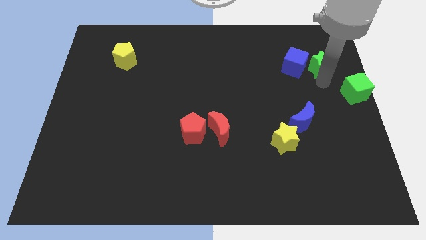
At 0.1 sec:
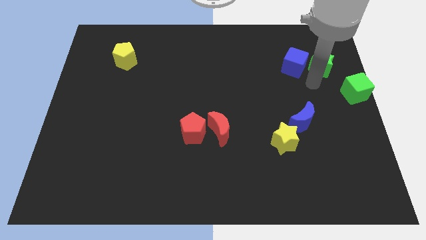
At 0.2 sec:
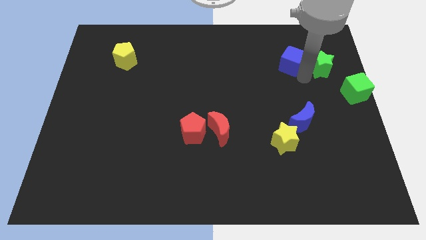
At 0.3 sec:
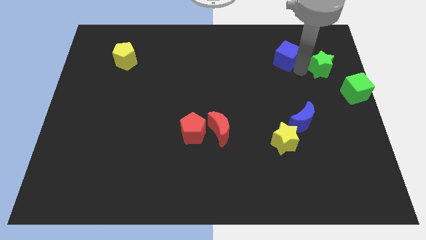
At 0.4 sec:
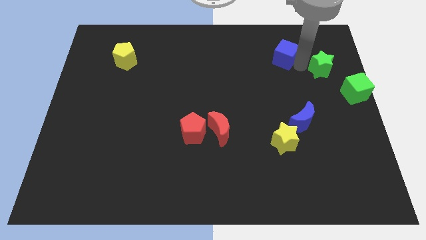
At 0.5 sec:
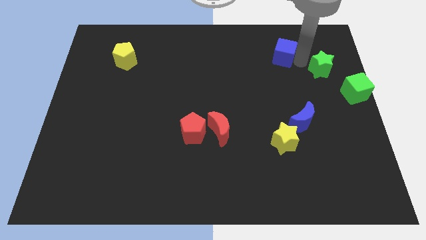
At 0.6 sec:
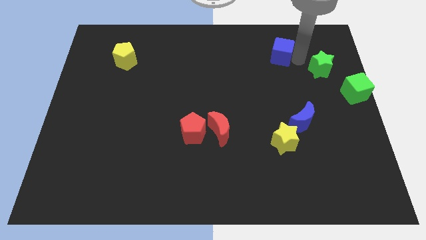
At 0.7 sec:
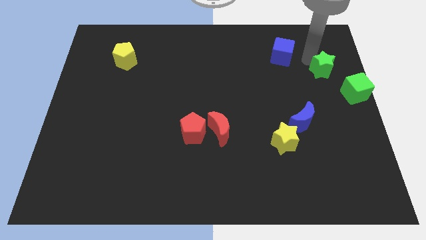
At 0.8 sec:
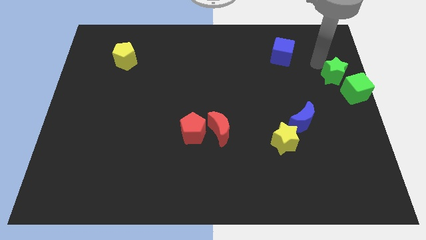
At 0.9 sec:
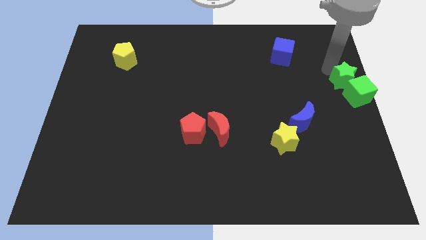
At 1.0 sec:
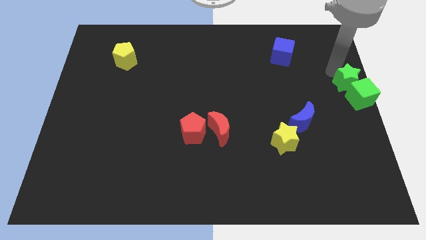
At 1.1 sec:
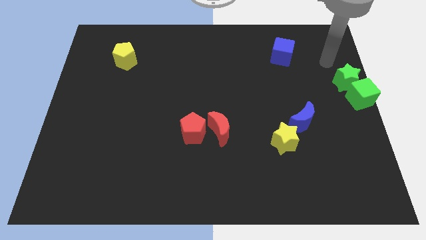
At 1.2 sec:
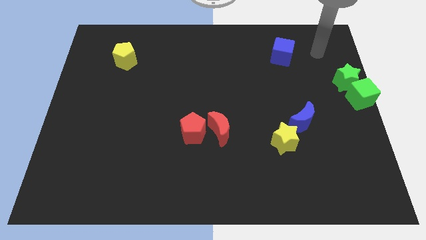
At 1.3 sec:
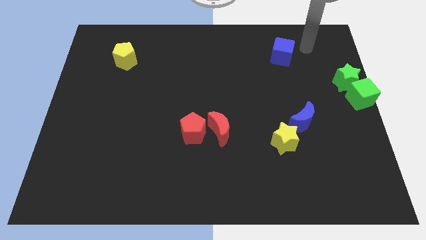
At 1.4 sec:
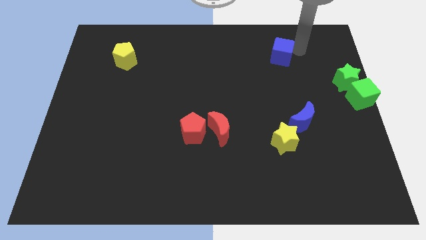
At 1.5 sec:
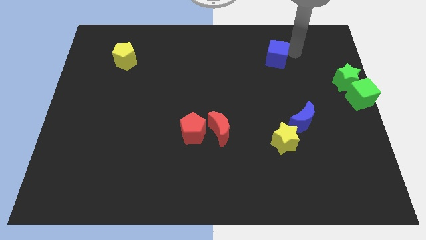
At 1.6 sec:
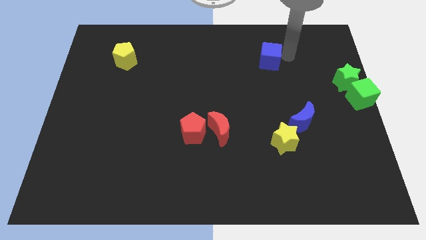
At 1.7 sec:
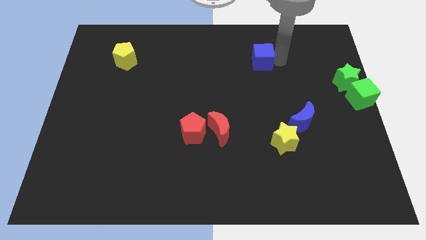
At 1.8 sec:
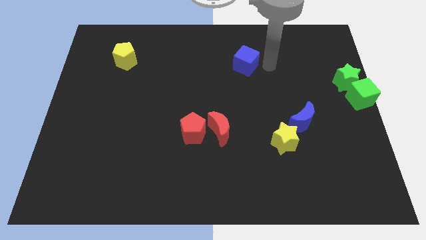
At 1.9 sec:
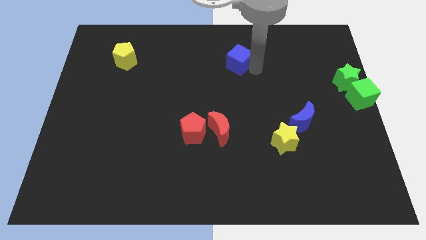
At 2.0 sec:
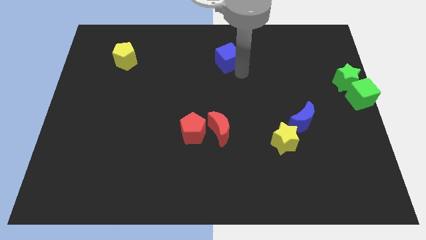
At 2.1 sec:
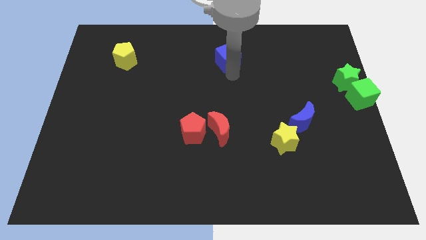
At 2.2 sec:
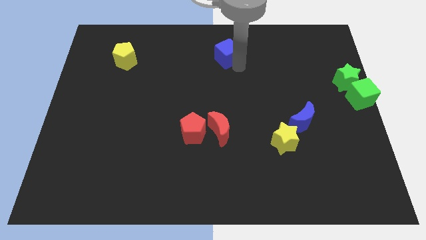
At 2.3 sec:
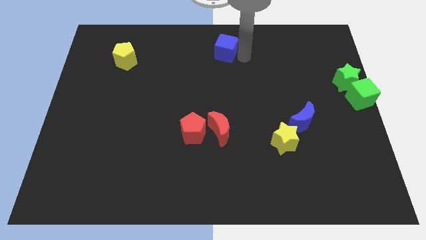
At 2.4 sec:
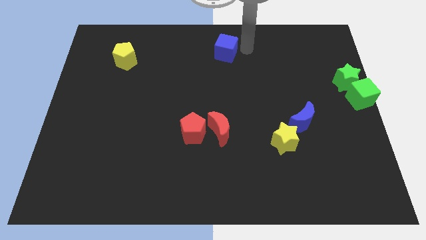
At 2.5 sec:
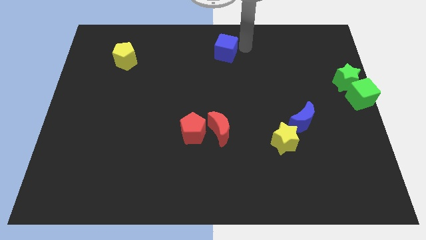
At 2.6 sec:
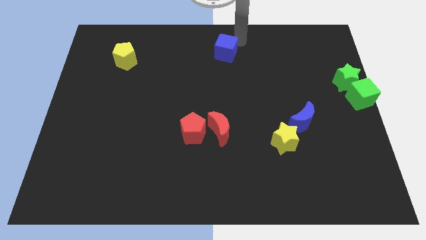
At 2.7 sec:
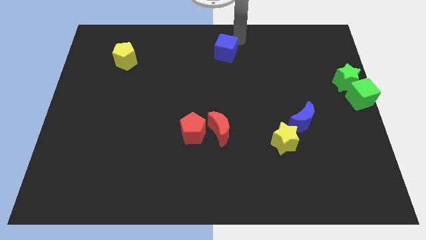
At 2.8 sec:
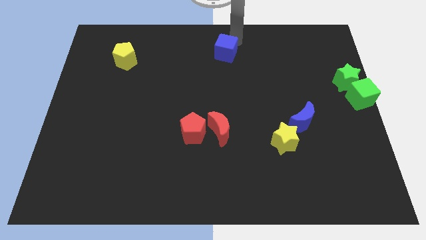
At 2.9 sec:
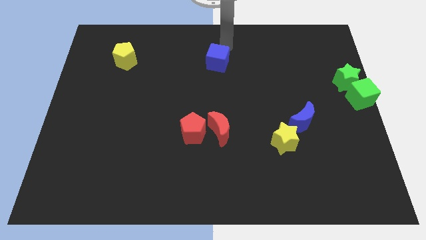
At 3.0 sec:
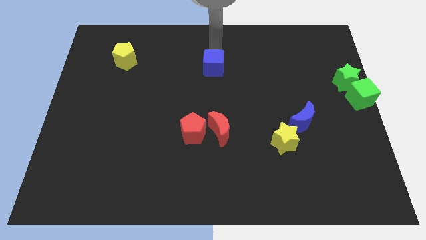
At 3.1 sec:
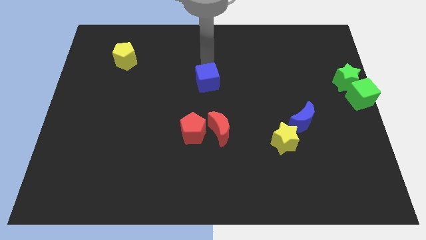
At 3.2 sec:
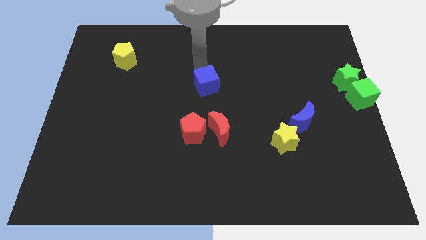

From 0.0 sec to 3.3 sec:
push blue block towards the red crescent

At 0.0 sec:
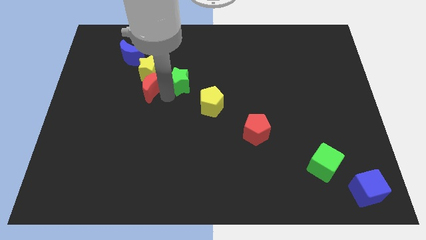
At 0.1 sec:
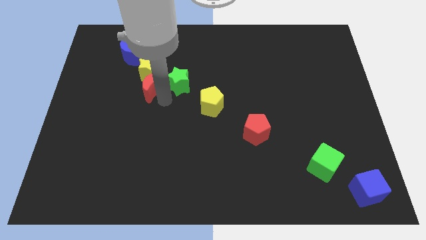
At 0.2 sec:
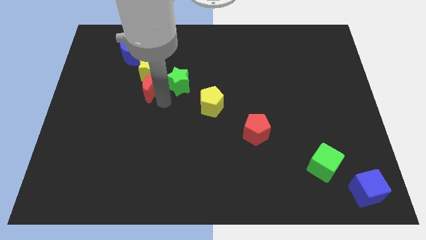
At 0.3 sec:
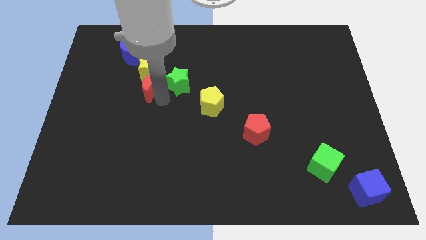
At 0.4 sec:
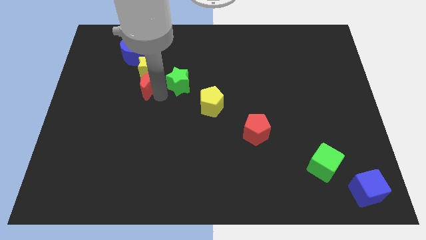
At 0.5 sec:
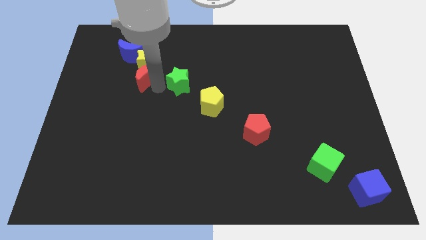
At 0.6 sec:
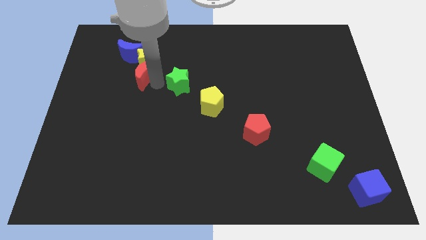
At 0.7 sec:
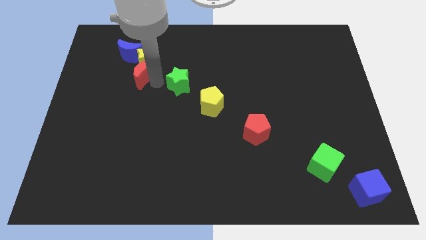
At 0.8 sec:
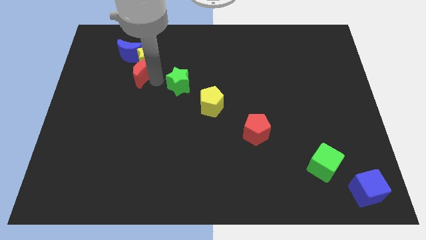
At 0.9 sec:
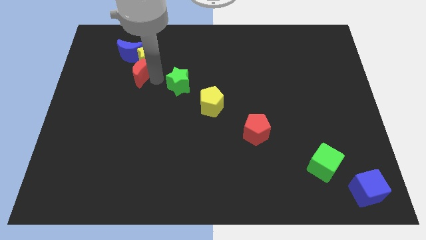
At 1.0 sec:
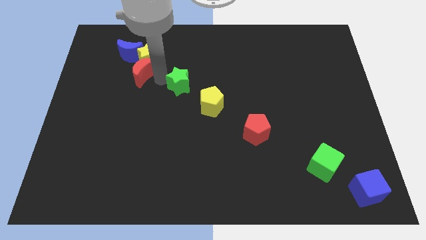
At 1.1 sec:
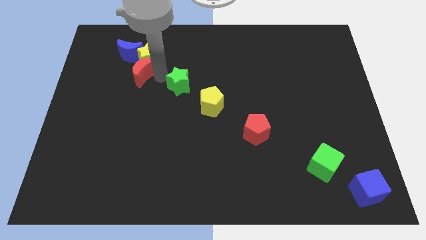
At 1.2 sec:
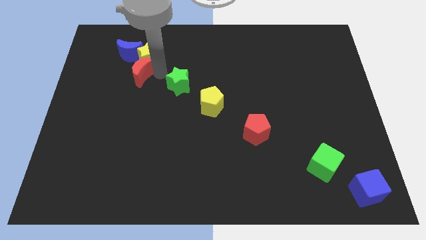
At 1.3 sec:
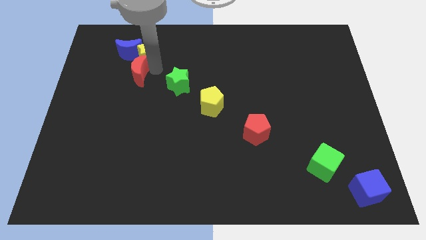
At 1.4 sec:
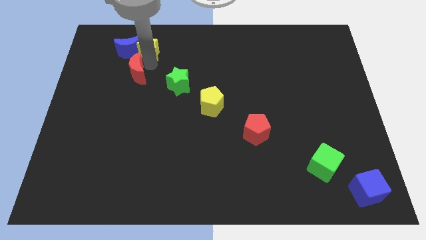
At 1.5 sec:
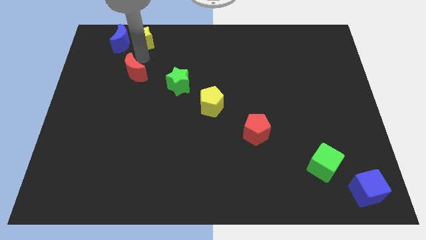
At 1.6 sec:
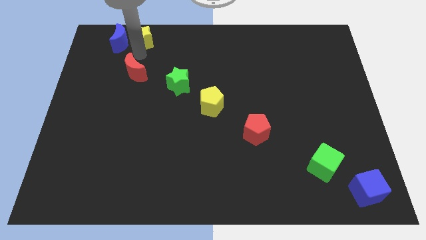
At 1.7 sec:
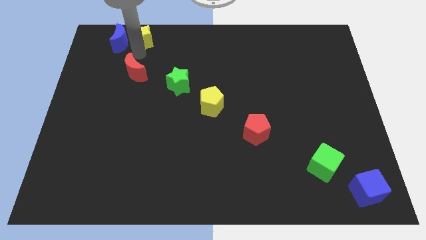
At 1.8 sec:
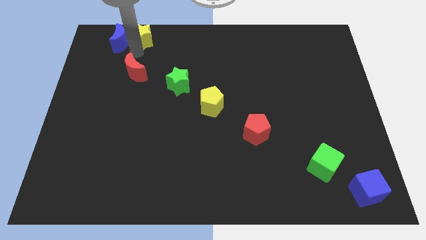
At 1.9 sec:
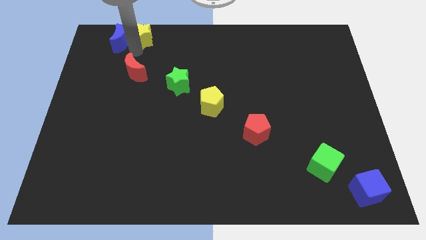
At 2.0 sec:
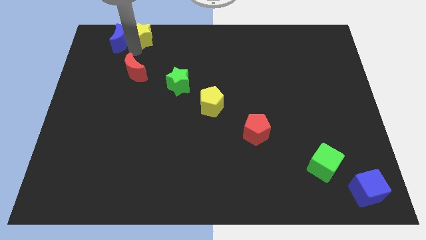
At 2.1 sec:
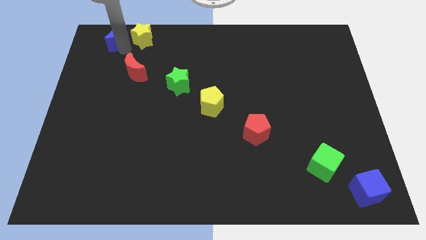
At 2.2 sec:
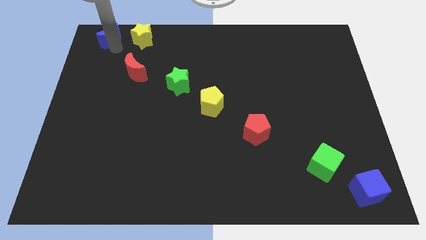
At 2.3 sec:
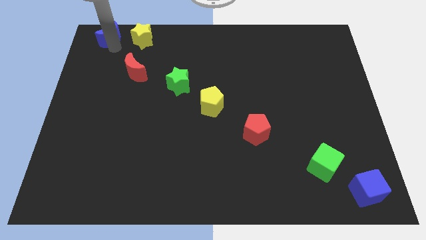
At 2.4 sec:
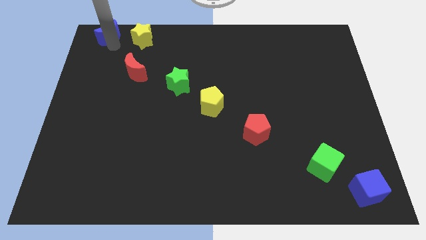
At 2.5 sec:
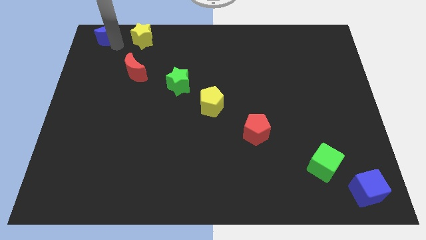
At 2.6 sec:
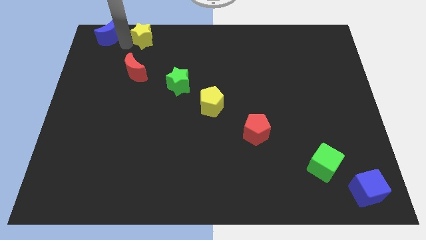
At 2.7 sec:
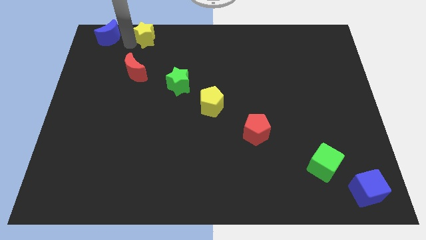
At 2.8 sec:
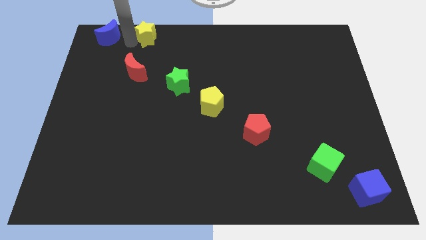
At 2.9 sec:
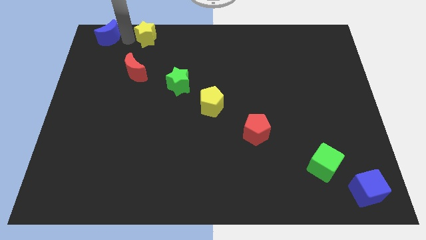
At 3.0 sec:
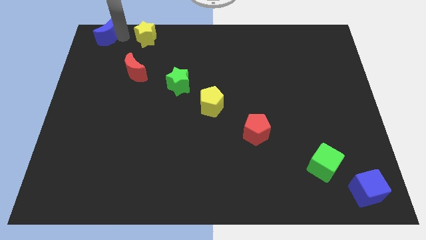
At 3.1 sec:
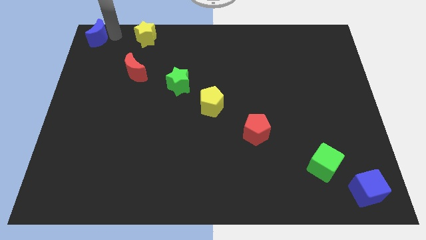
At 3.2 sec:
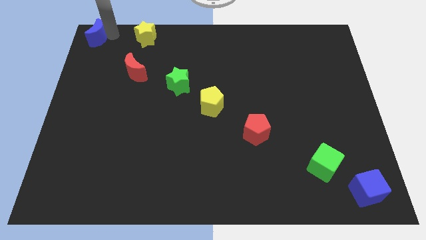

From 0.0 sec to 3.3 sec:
place the yellow star above the red moon

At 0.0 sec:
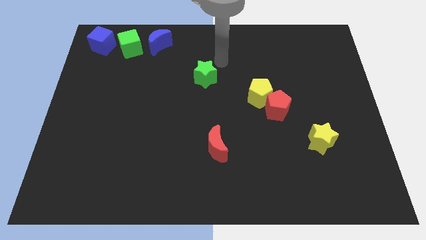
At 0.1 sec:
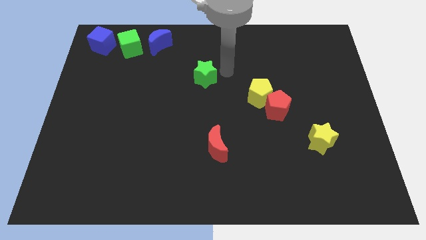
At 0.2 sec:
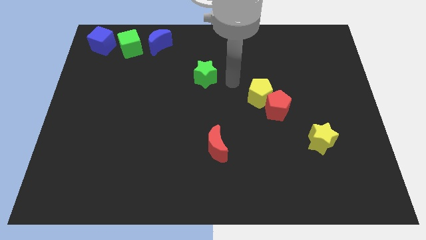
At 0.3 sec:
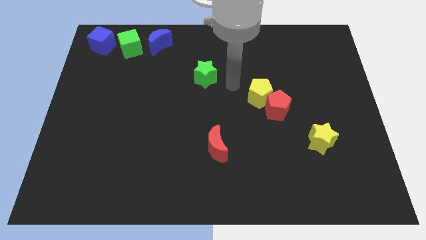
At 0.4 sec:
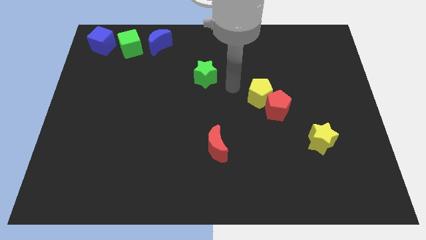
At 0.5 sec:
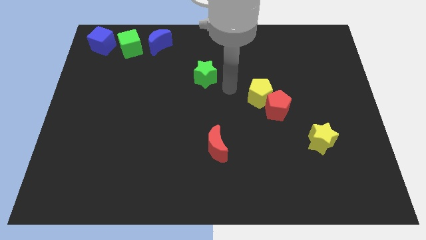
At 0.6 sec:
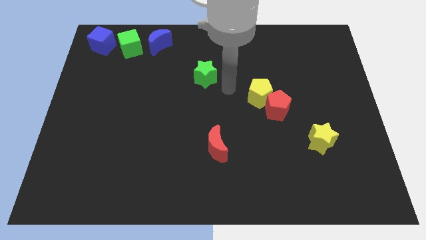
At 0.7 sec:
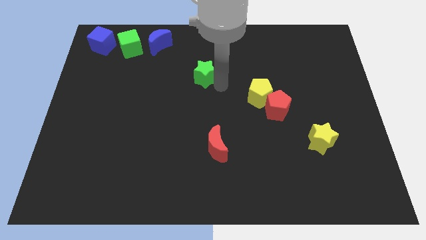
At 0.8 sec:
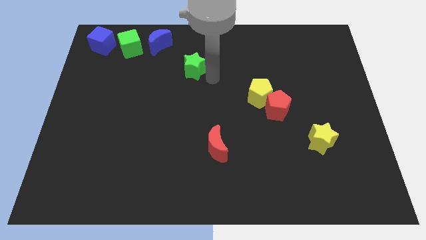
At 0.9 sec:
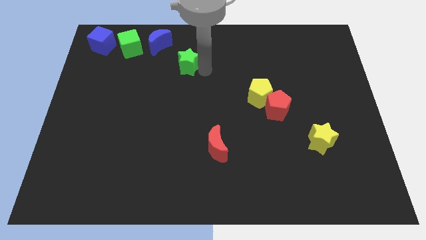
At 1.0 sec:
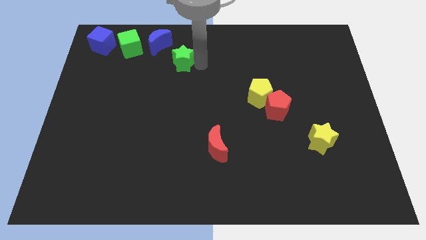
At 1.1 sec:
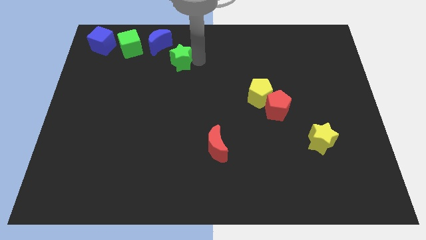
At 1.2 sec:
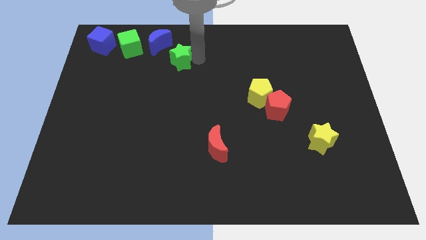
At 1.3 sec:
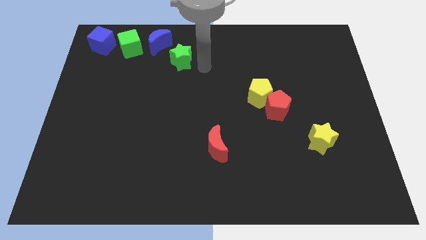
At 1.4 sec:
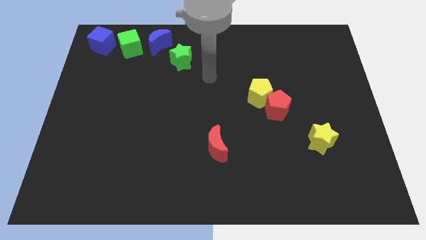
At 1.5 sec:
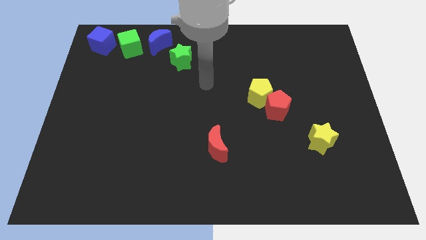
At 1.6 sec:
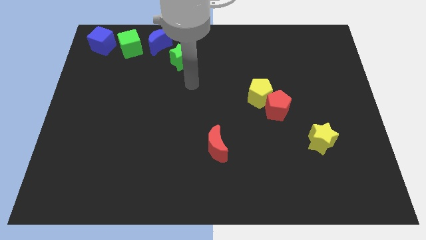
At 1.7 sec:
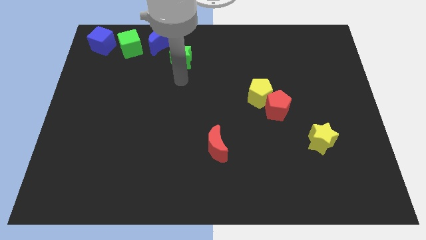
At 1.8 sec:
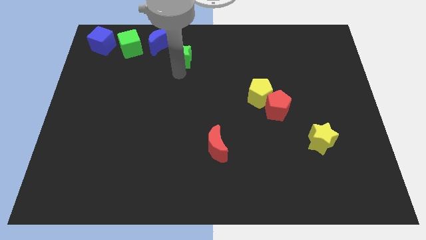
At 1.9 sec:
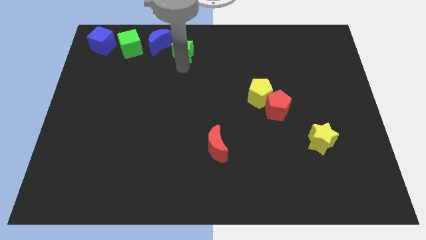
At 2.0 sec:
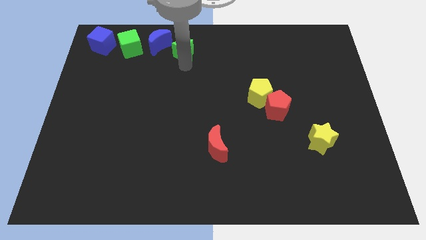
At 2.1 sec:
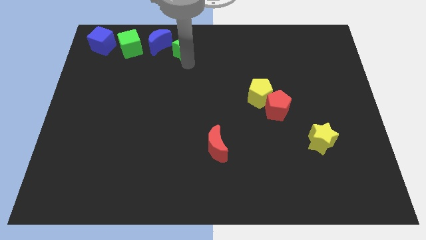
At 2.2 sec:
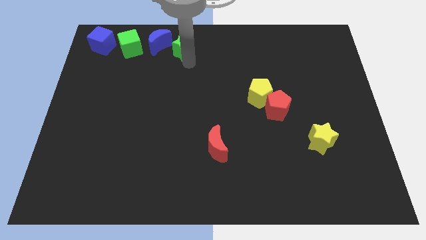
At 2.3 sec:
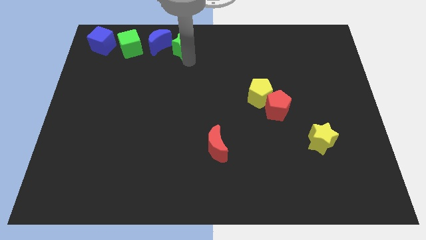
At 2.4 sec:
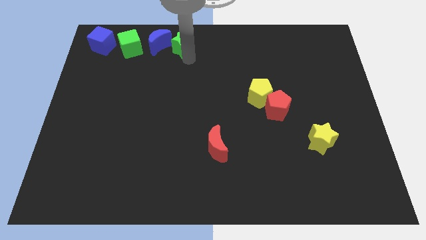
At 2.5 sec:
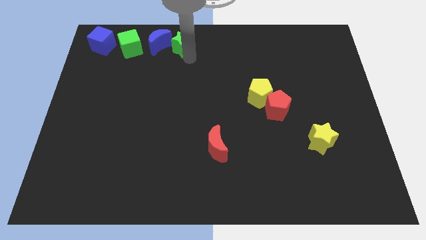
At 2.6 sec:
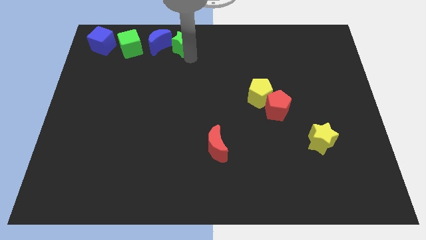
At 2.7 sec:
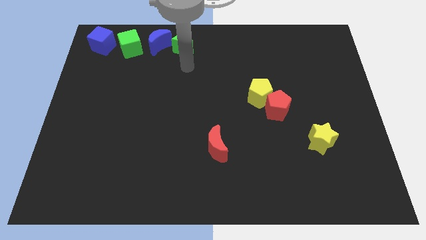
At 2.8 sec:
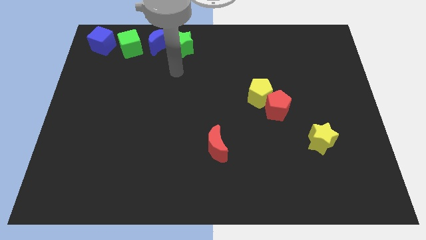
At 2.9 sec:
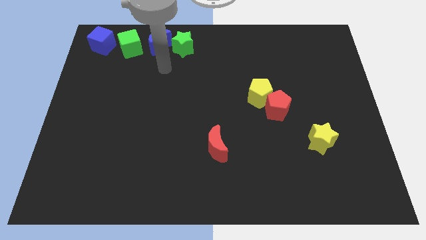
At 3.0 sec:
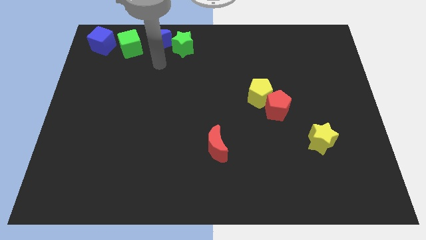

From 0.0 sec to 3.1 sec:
place green star beside blue moon
